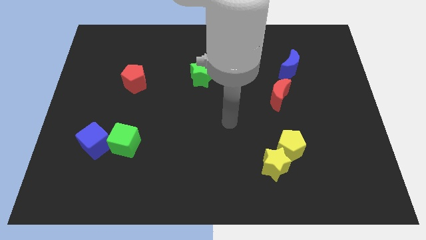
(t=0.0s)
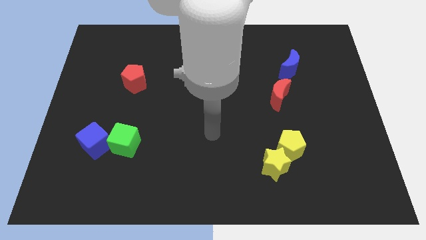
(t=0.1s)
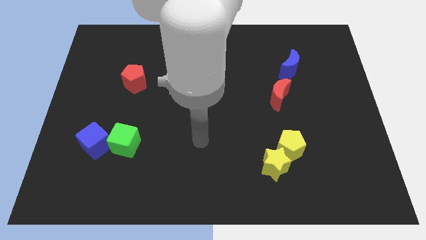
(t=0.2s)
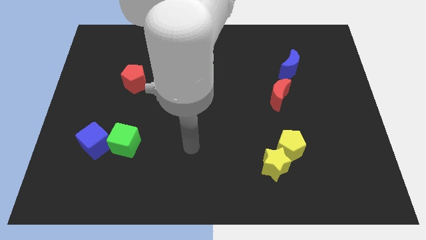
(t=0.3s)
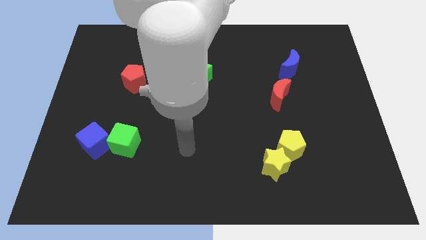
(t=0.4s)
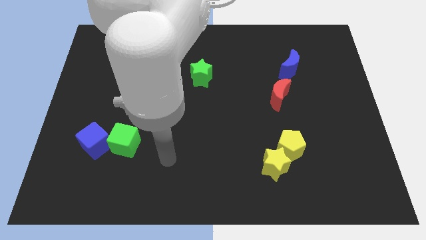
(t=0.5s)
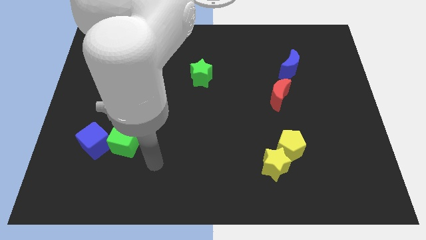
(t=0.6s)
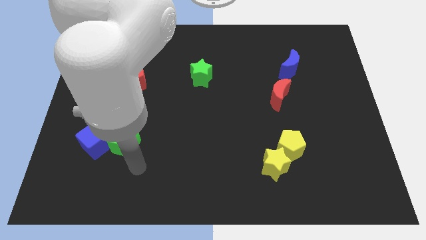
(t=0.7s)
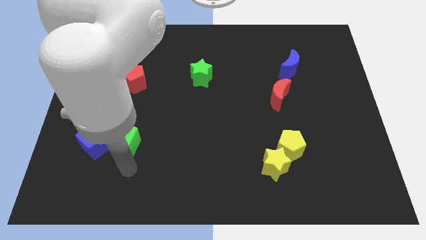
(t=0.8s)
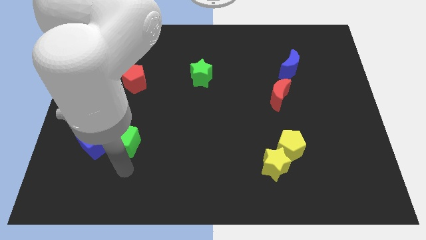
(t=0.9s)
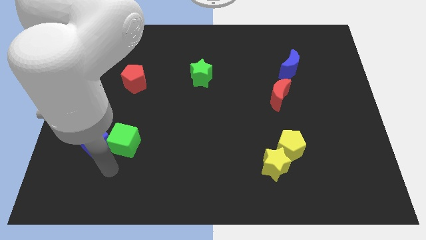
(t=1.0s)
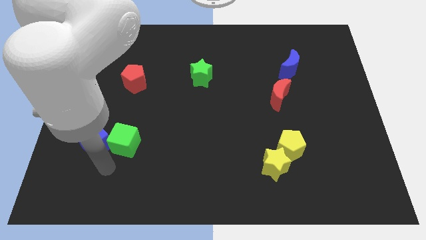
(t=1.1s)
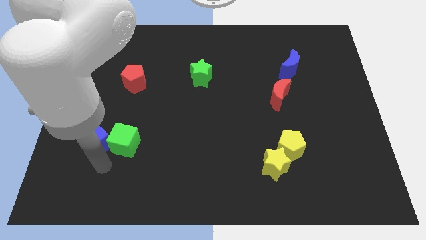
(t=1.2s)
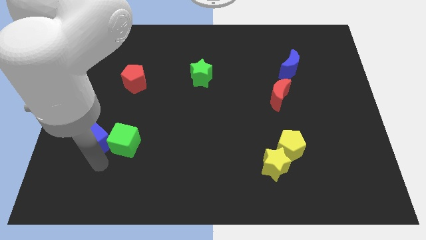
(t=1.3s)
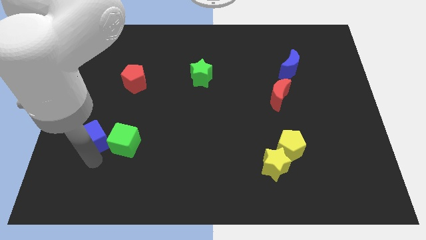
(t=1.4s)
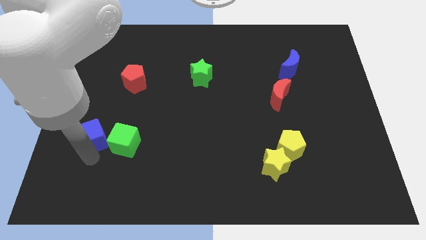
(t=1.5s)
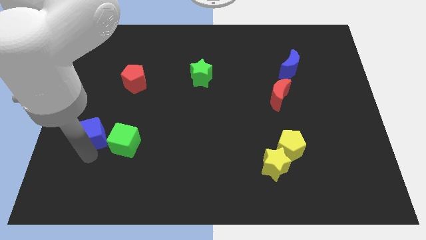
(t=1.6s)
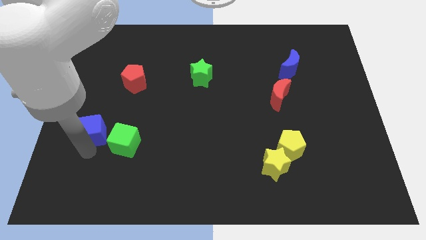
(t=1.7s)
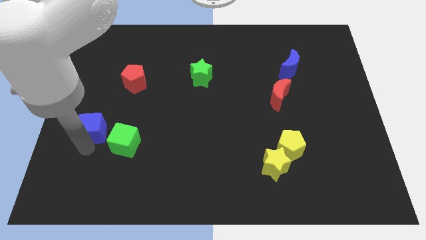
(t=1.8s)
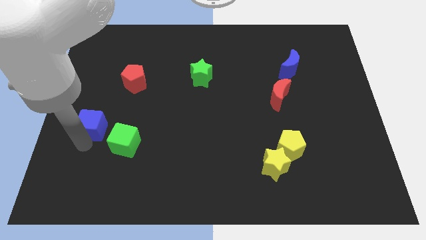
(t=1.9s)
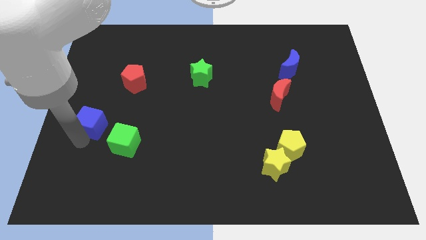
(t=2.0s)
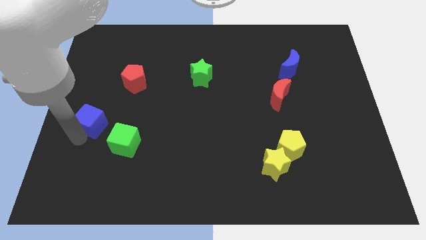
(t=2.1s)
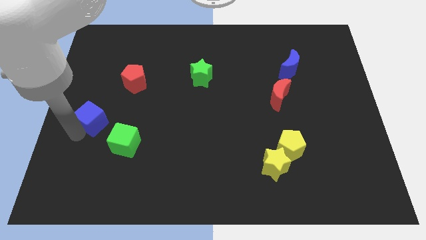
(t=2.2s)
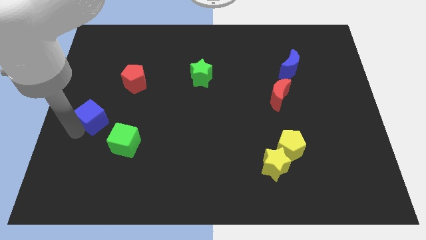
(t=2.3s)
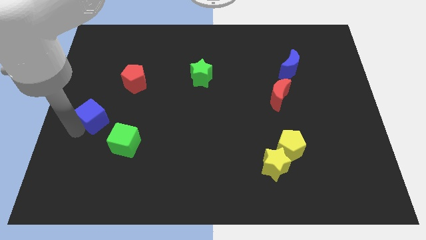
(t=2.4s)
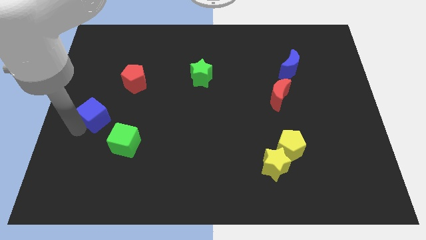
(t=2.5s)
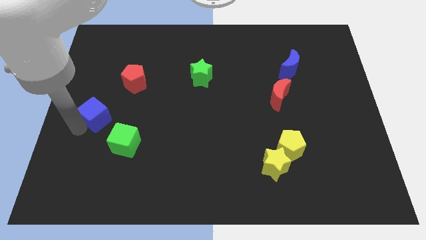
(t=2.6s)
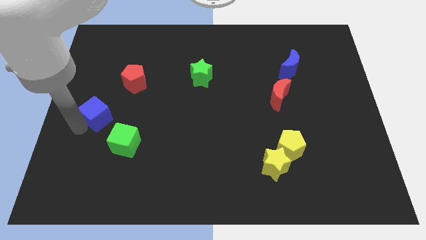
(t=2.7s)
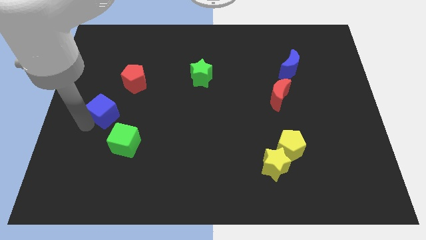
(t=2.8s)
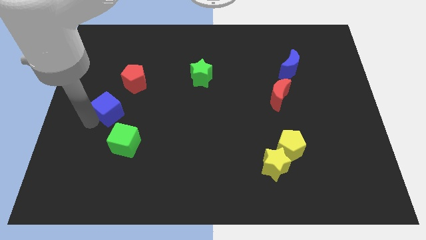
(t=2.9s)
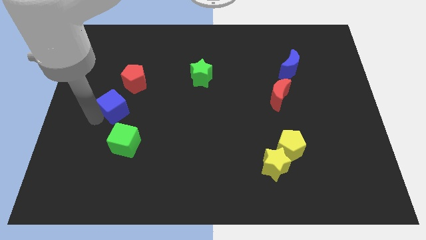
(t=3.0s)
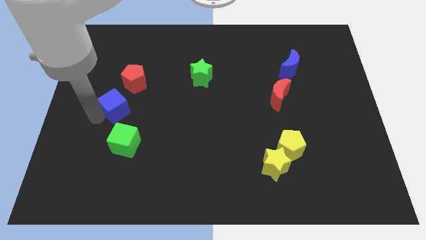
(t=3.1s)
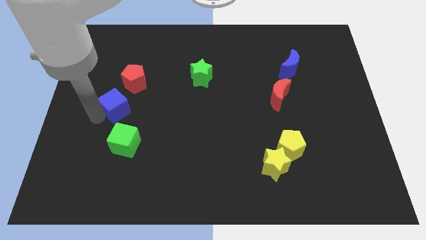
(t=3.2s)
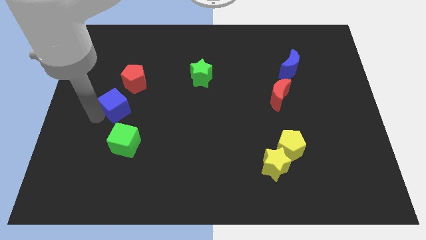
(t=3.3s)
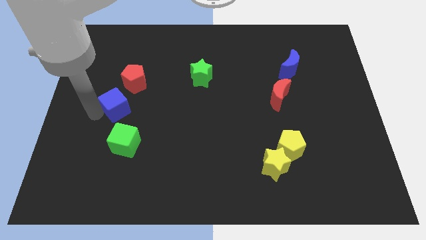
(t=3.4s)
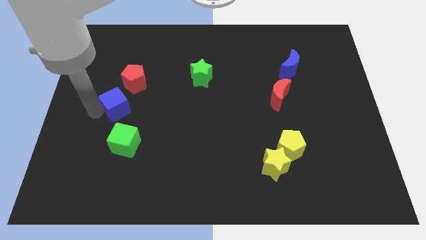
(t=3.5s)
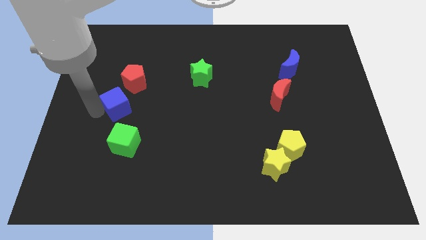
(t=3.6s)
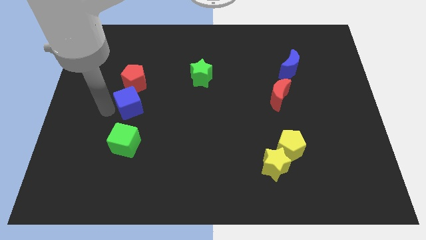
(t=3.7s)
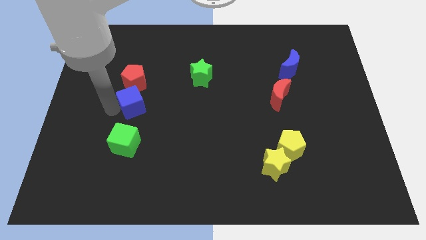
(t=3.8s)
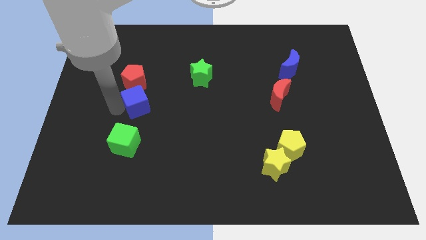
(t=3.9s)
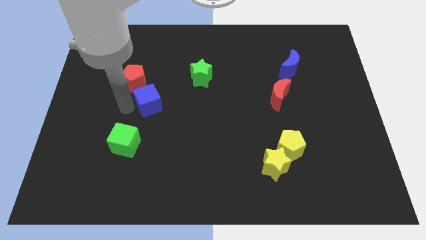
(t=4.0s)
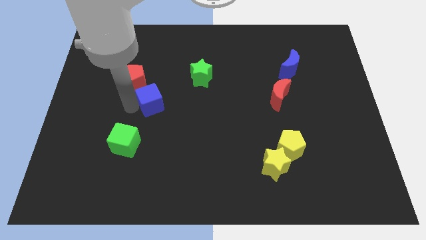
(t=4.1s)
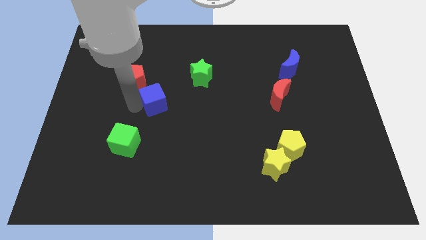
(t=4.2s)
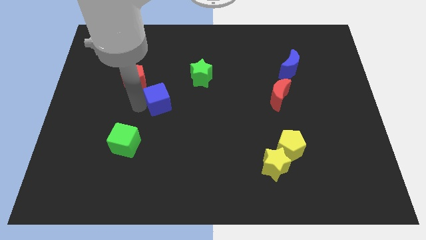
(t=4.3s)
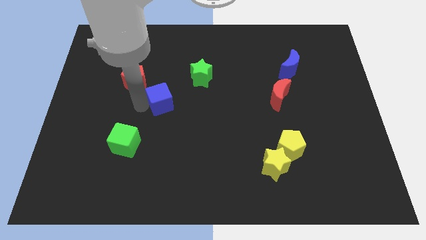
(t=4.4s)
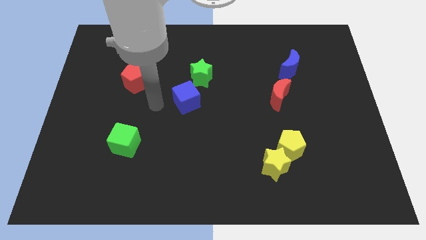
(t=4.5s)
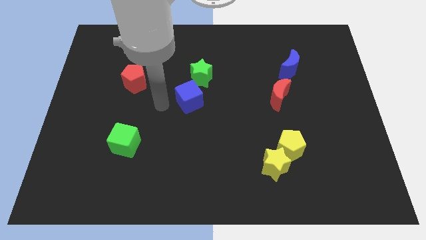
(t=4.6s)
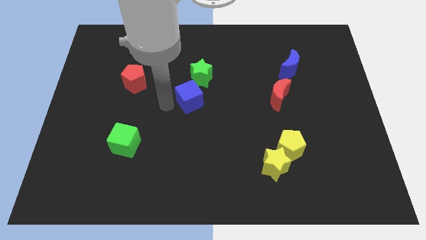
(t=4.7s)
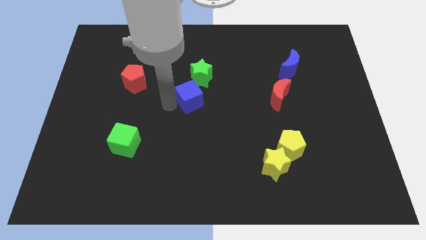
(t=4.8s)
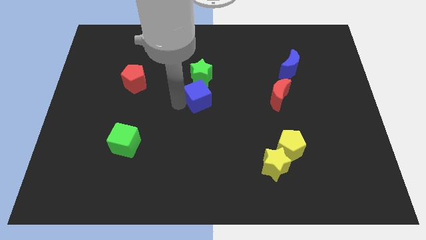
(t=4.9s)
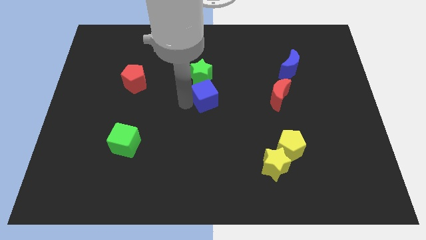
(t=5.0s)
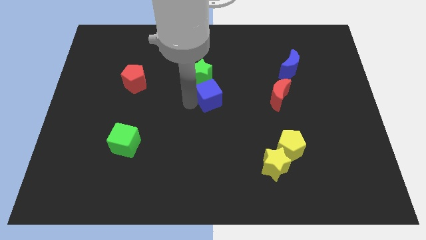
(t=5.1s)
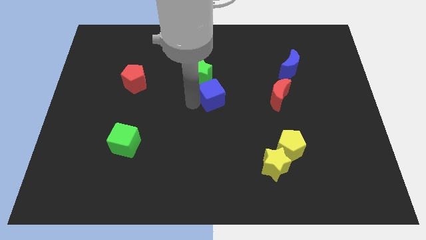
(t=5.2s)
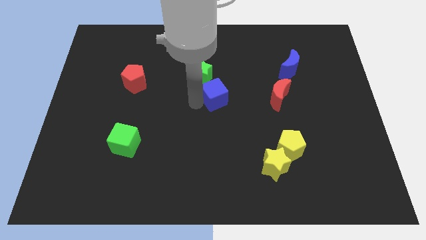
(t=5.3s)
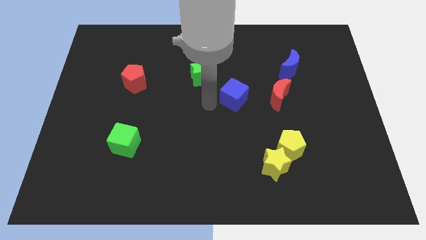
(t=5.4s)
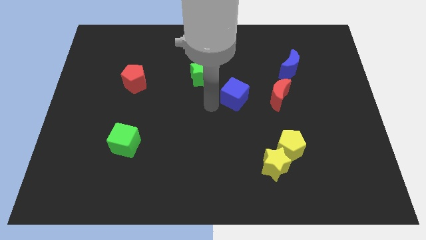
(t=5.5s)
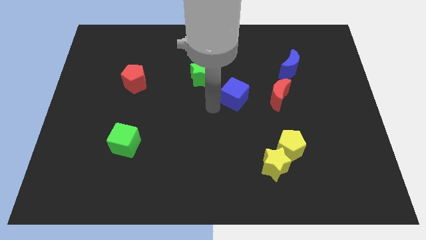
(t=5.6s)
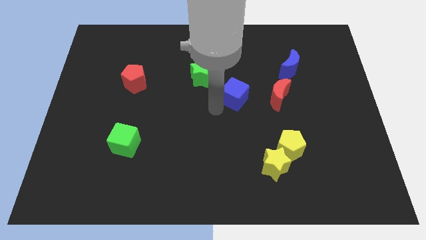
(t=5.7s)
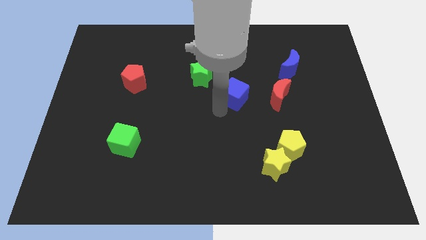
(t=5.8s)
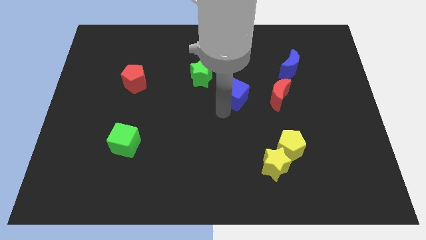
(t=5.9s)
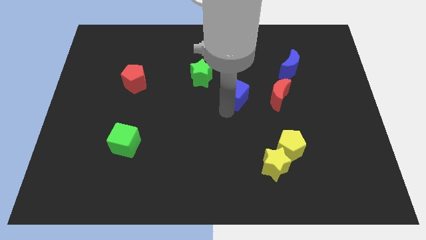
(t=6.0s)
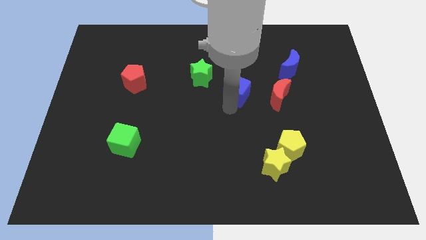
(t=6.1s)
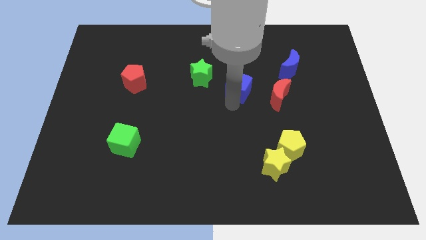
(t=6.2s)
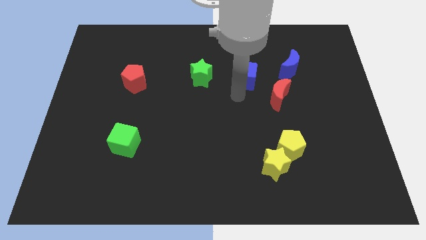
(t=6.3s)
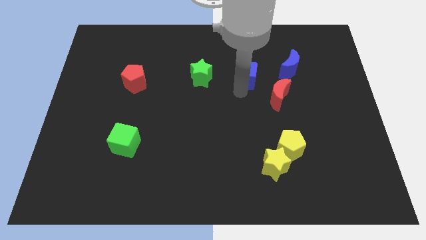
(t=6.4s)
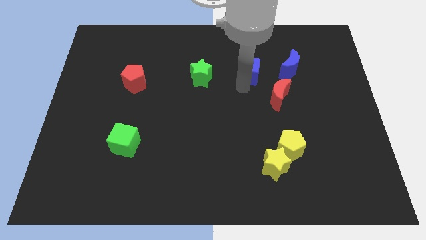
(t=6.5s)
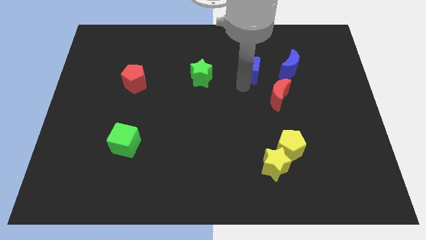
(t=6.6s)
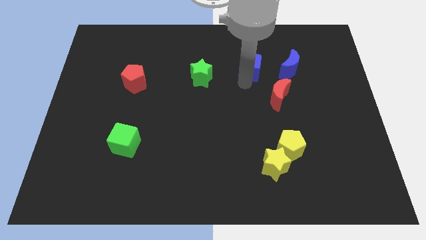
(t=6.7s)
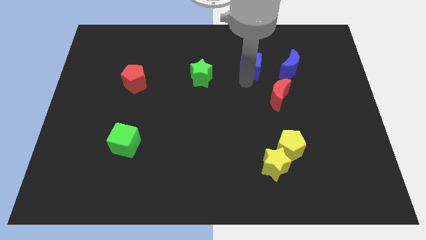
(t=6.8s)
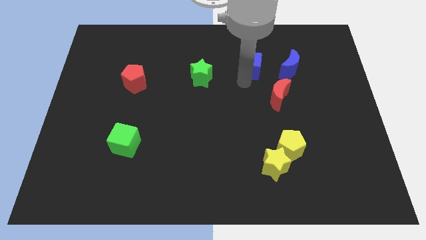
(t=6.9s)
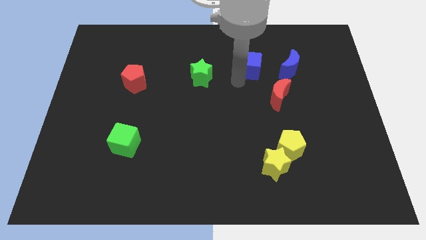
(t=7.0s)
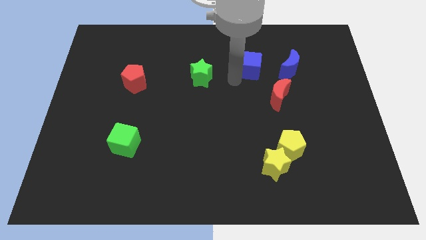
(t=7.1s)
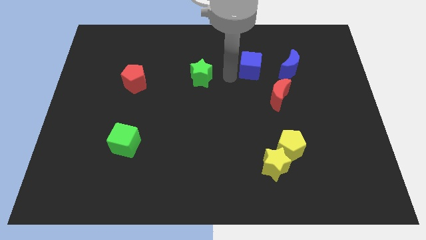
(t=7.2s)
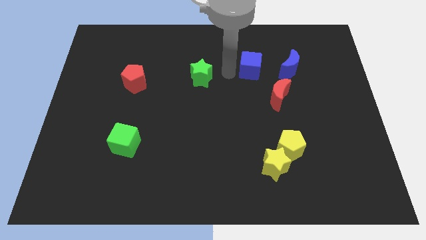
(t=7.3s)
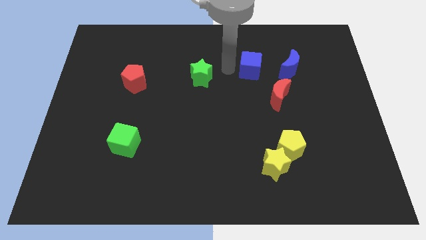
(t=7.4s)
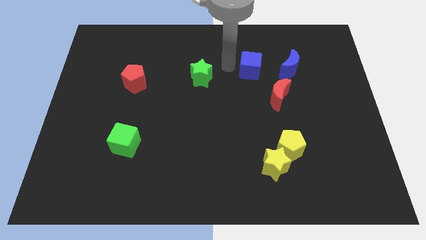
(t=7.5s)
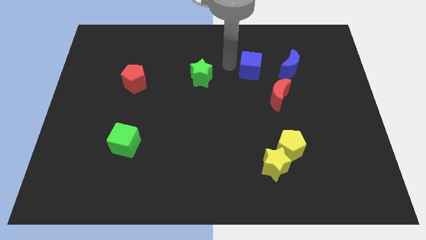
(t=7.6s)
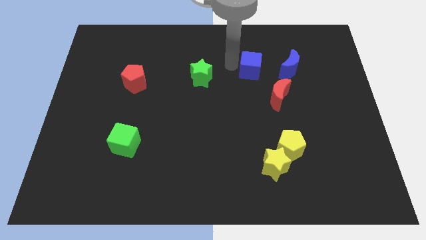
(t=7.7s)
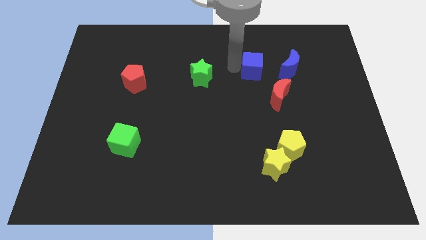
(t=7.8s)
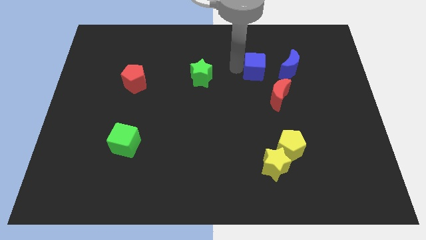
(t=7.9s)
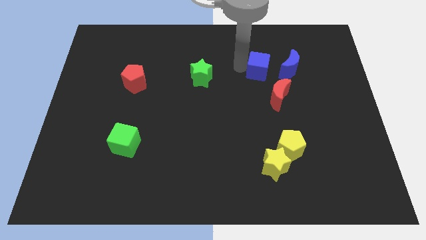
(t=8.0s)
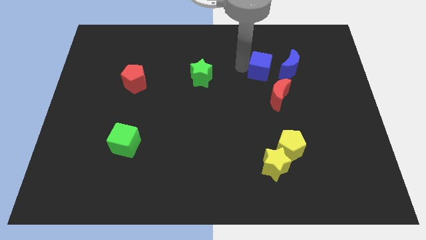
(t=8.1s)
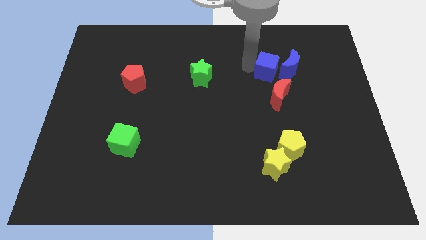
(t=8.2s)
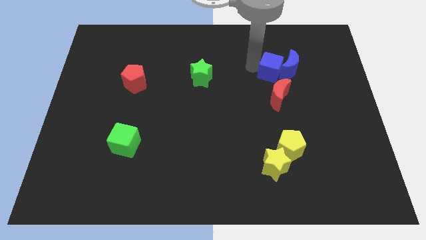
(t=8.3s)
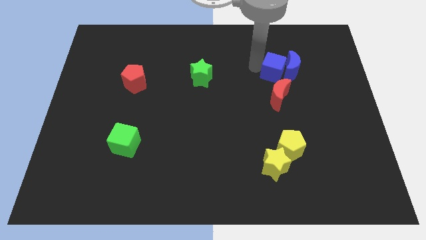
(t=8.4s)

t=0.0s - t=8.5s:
put the blue cube to the blue moon

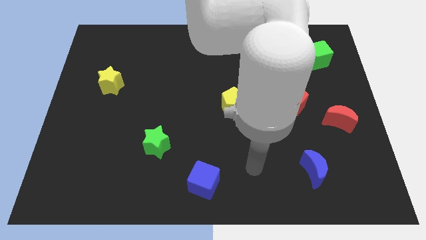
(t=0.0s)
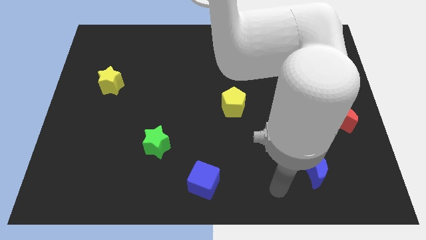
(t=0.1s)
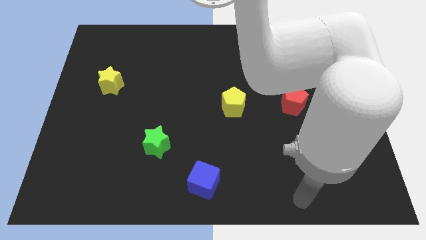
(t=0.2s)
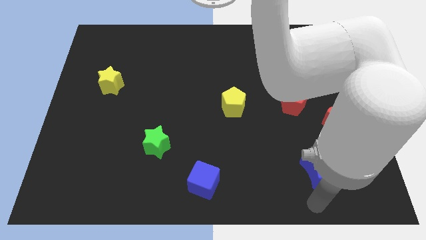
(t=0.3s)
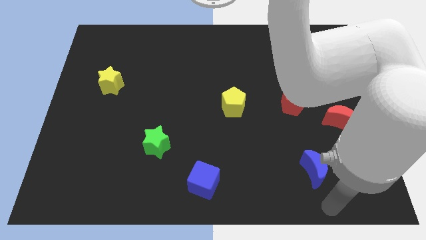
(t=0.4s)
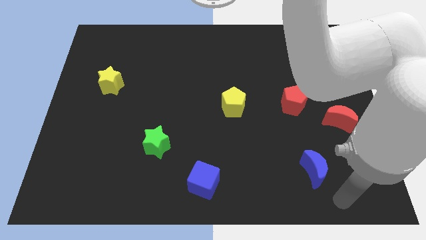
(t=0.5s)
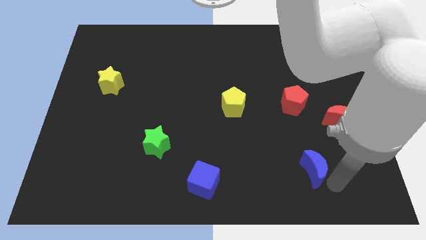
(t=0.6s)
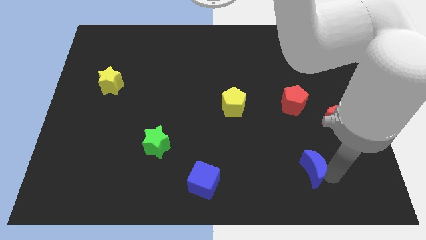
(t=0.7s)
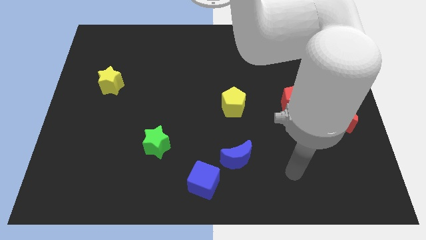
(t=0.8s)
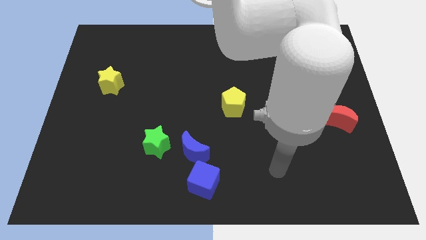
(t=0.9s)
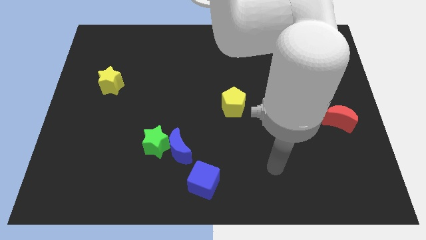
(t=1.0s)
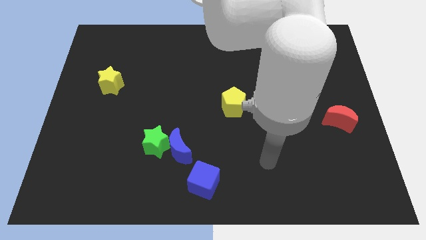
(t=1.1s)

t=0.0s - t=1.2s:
slide the blue moon to the green star
